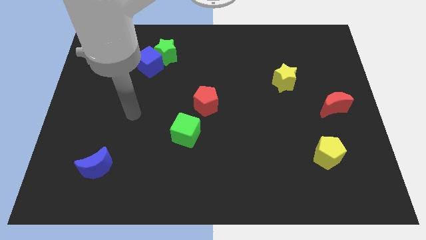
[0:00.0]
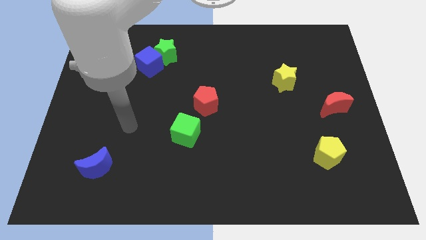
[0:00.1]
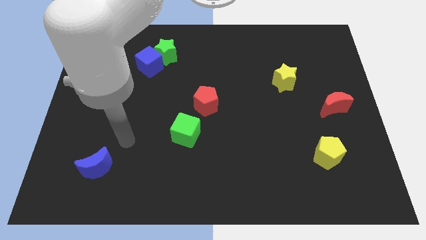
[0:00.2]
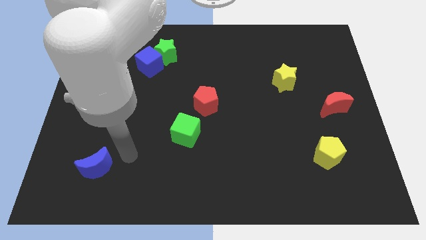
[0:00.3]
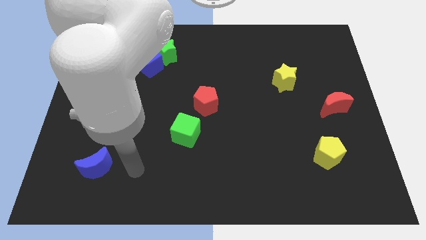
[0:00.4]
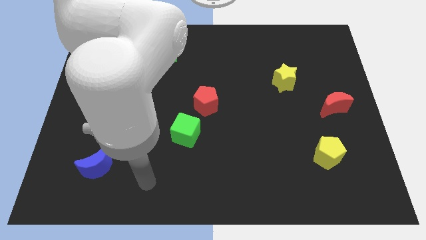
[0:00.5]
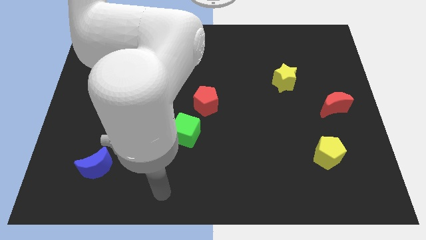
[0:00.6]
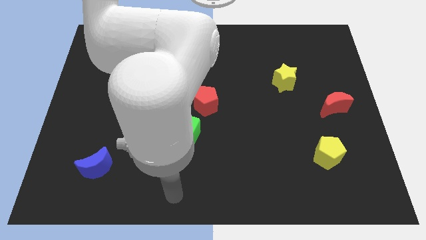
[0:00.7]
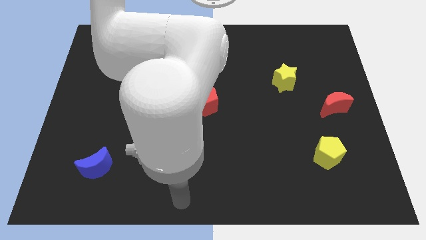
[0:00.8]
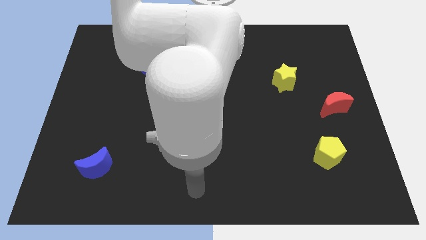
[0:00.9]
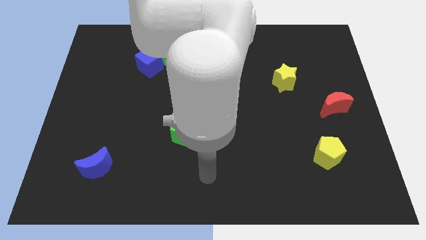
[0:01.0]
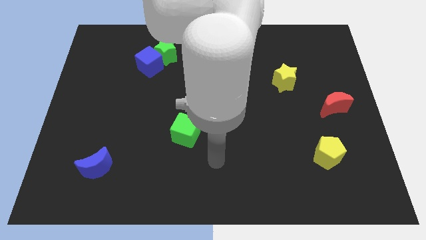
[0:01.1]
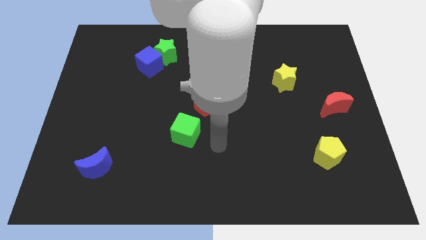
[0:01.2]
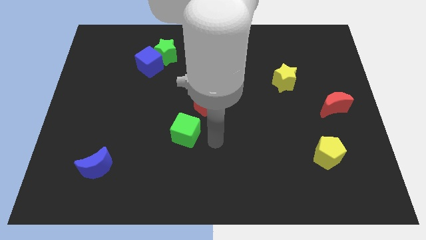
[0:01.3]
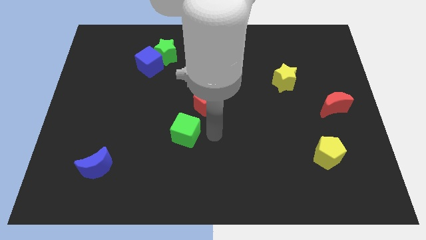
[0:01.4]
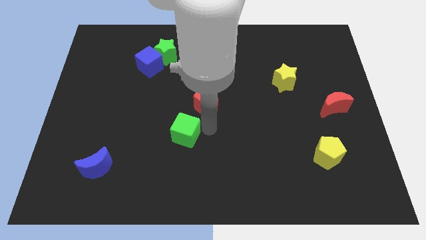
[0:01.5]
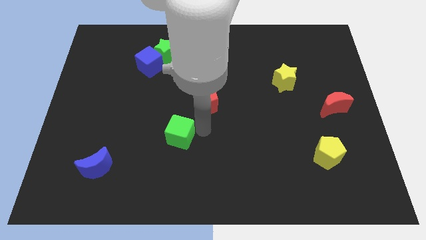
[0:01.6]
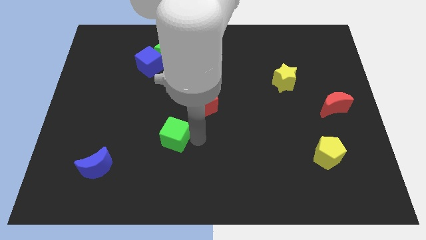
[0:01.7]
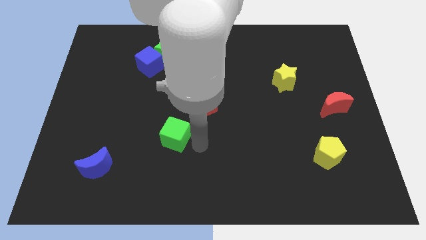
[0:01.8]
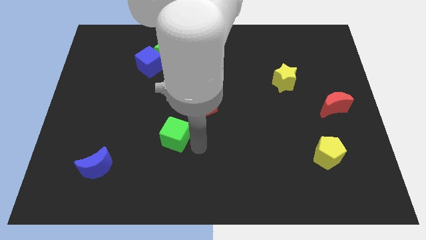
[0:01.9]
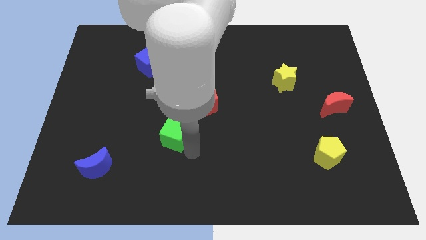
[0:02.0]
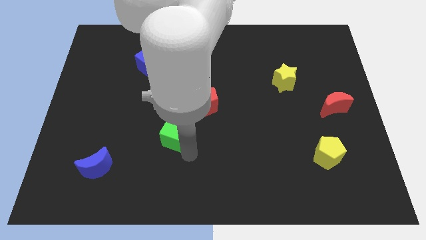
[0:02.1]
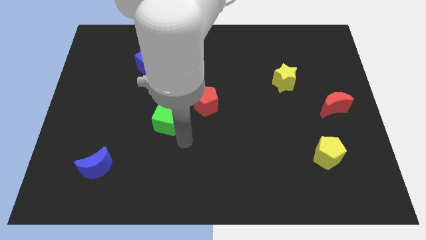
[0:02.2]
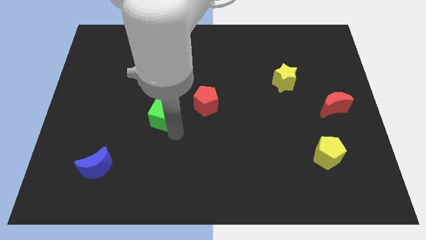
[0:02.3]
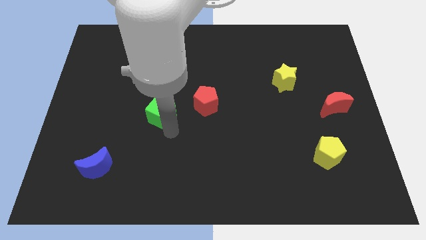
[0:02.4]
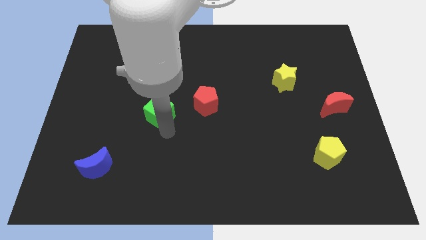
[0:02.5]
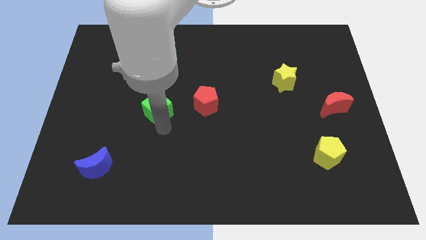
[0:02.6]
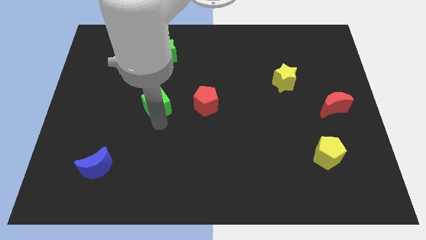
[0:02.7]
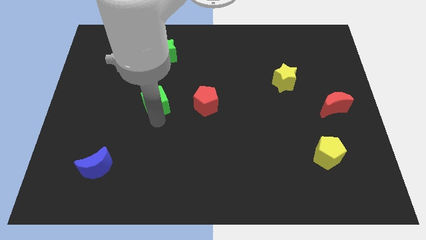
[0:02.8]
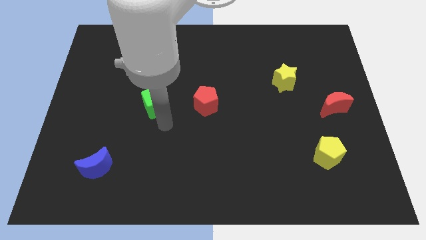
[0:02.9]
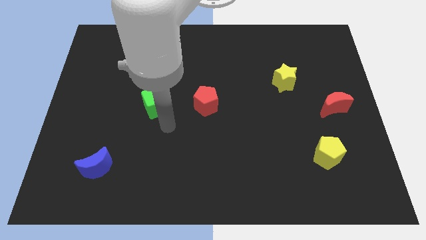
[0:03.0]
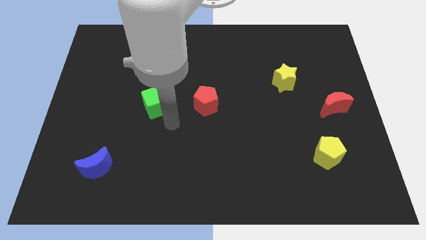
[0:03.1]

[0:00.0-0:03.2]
place the green cube to the bottom of the blue cube

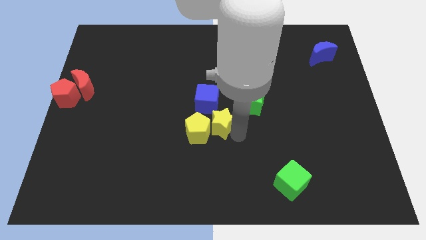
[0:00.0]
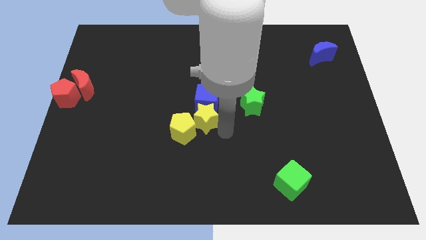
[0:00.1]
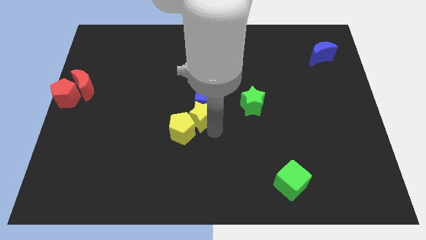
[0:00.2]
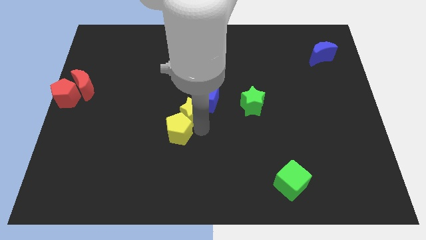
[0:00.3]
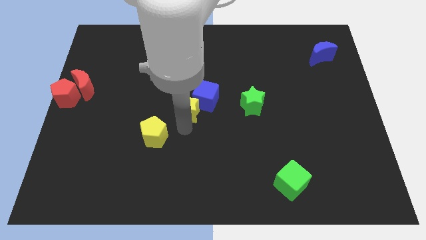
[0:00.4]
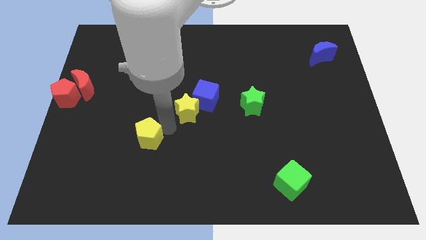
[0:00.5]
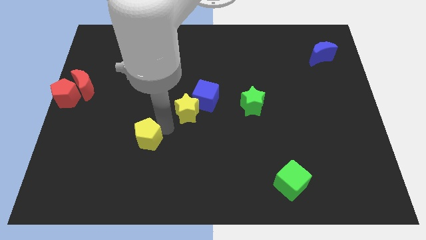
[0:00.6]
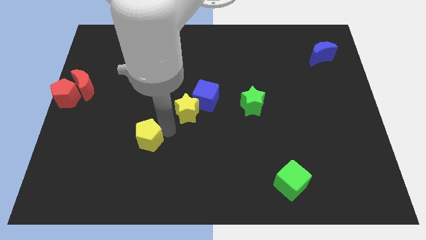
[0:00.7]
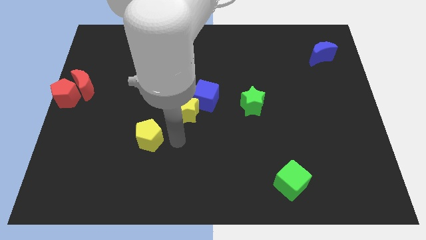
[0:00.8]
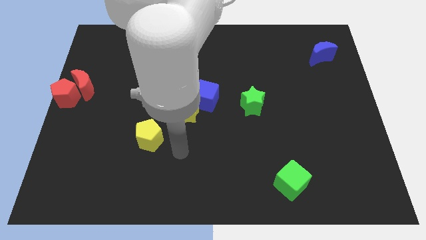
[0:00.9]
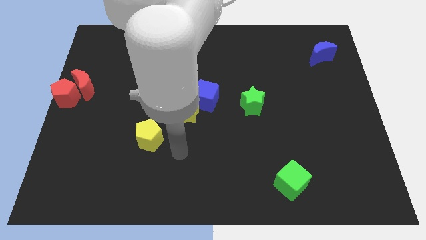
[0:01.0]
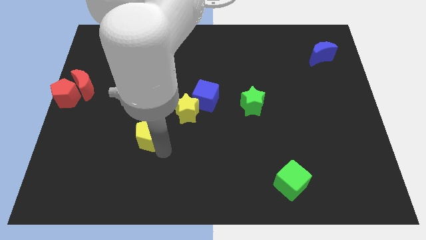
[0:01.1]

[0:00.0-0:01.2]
separate the yellow star and yellow pentagon

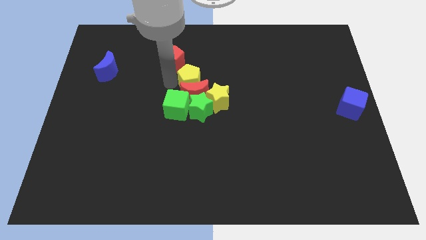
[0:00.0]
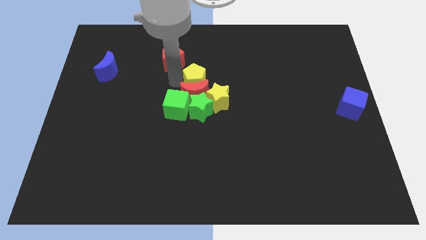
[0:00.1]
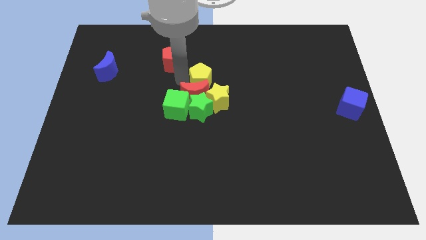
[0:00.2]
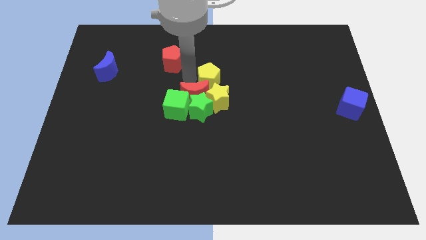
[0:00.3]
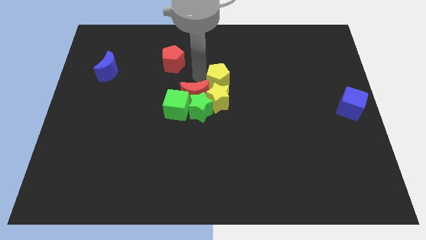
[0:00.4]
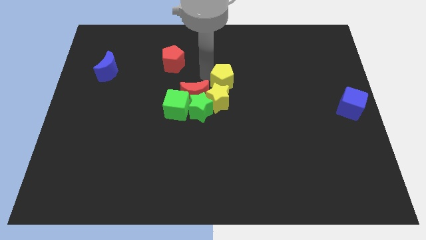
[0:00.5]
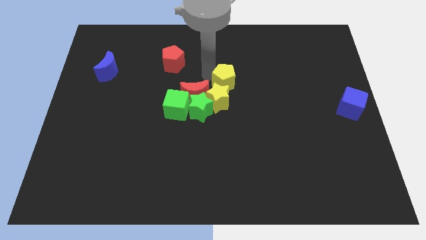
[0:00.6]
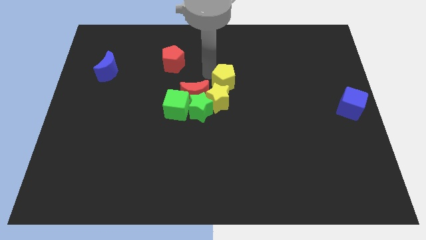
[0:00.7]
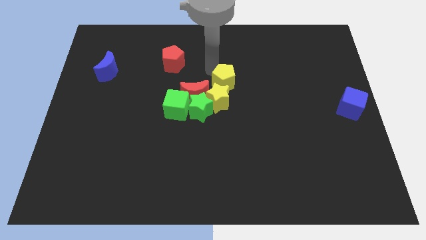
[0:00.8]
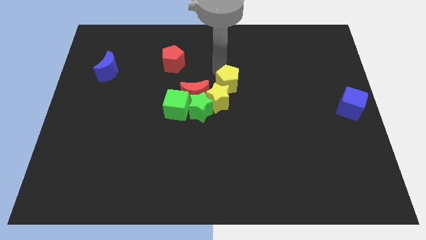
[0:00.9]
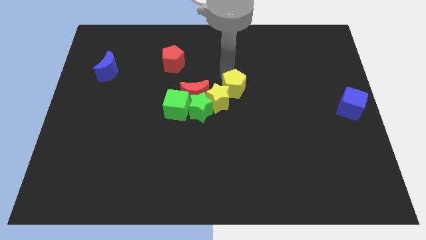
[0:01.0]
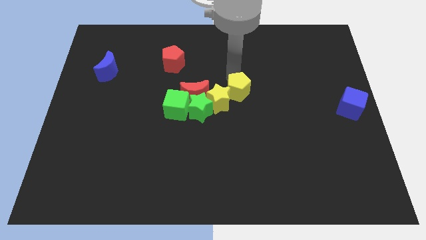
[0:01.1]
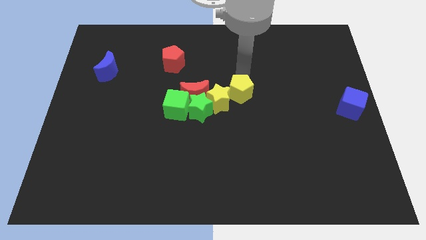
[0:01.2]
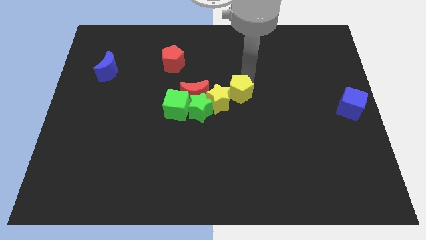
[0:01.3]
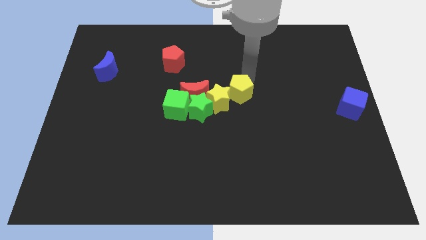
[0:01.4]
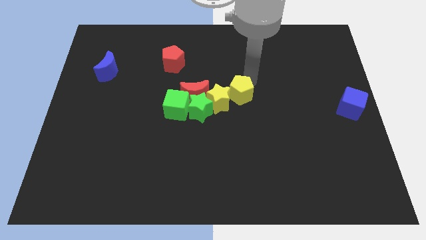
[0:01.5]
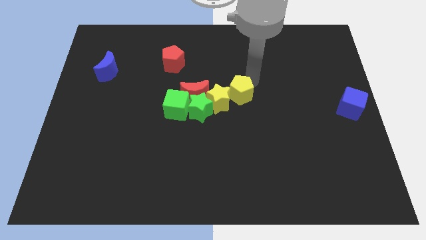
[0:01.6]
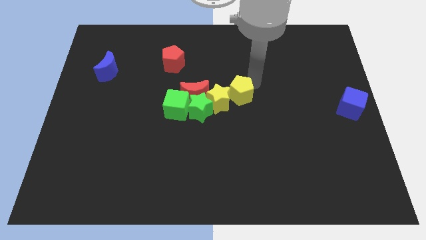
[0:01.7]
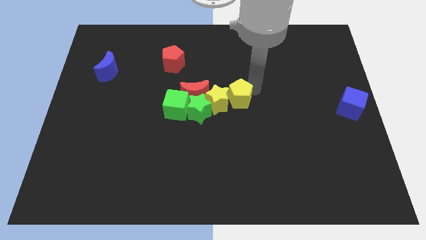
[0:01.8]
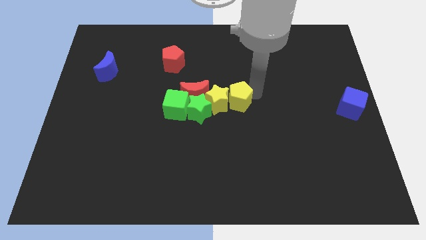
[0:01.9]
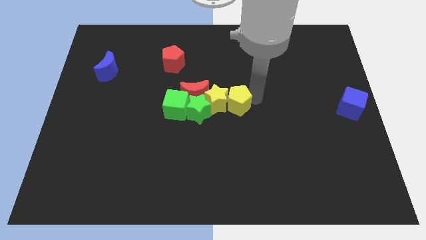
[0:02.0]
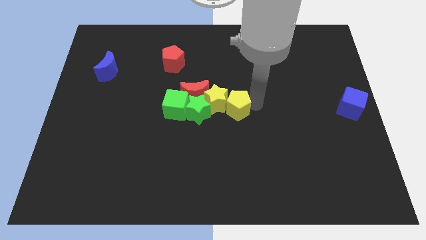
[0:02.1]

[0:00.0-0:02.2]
place yellow pentagon beside yellow star

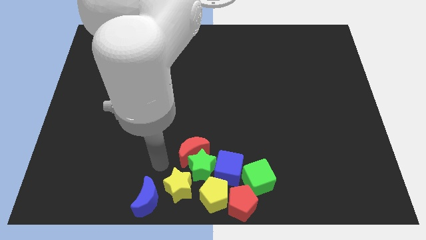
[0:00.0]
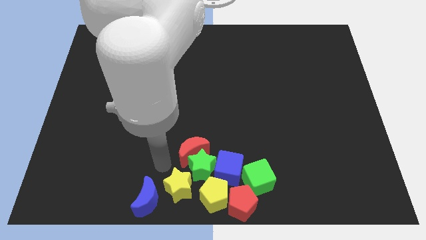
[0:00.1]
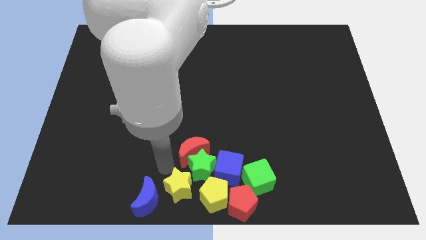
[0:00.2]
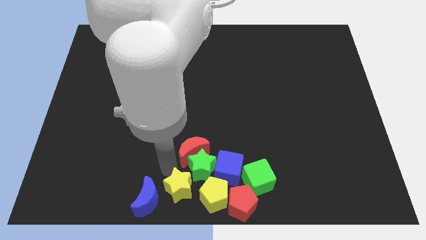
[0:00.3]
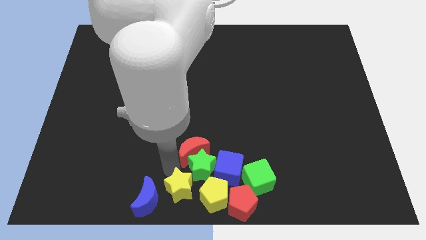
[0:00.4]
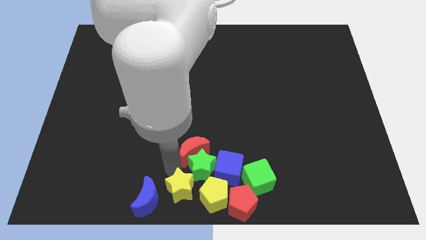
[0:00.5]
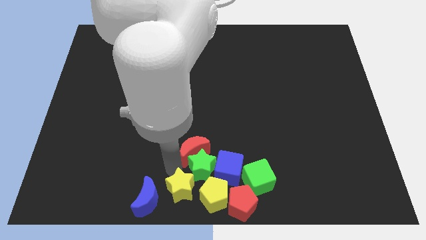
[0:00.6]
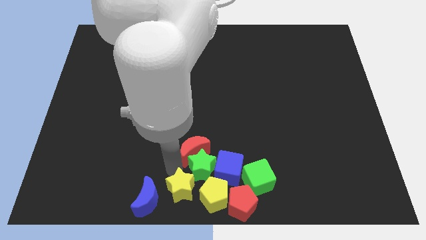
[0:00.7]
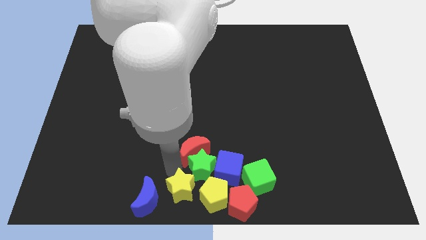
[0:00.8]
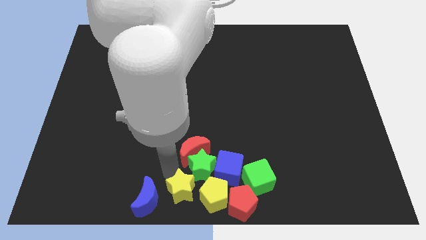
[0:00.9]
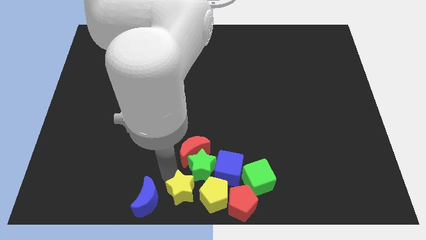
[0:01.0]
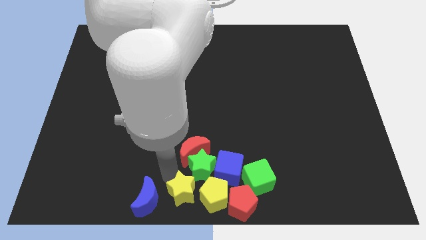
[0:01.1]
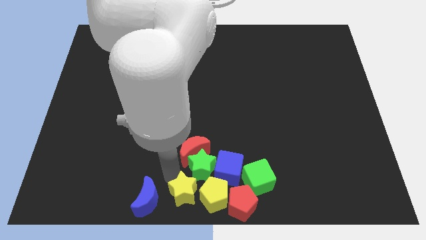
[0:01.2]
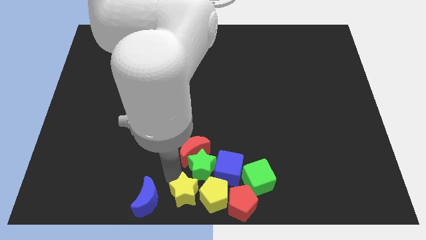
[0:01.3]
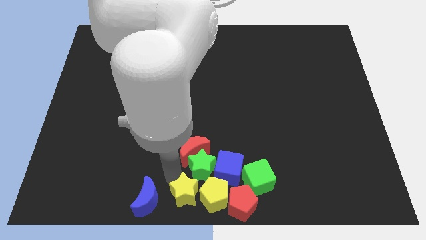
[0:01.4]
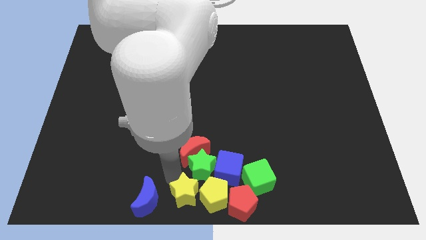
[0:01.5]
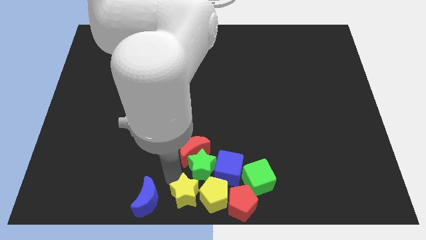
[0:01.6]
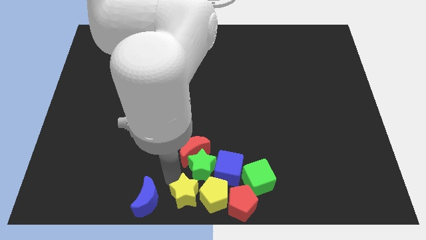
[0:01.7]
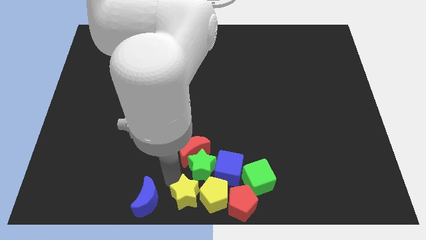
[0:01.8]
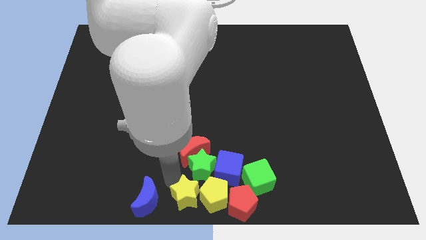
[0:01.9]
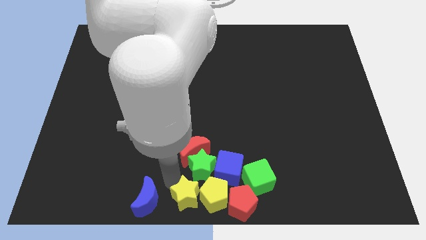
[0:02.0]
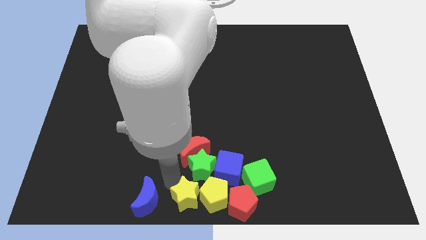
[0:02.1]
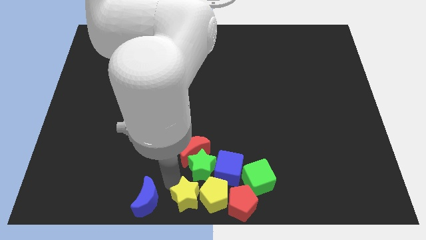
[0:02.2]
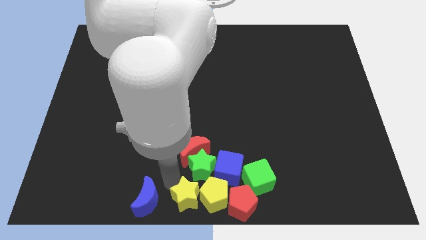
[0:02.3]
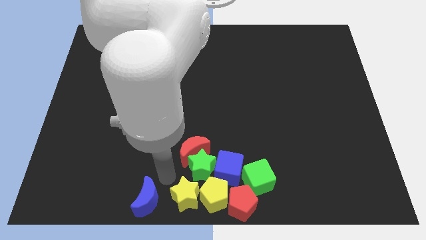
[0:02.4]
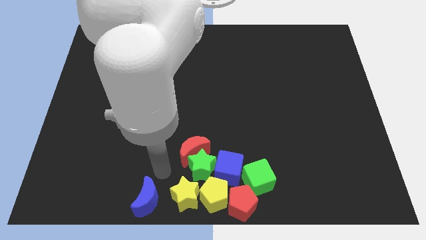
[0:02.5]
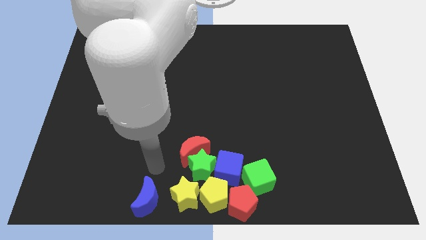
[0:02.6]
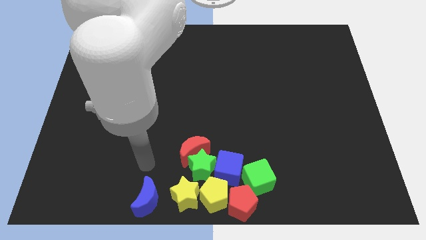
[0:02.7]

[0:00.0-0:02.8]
move yellow star on the left of the yellow pentagon
